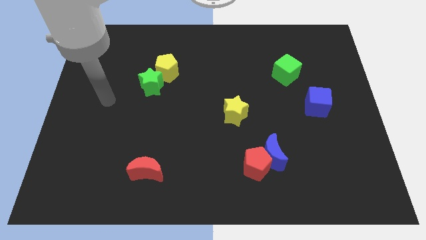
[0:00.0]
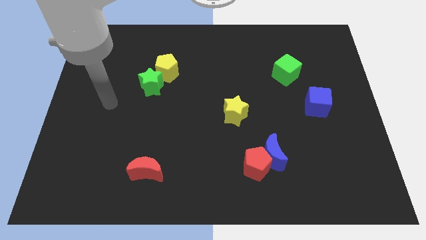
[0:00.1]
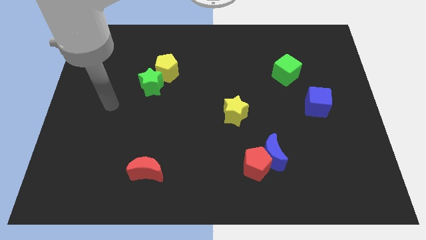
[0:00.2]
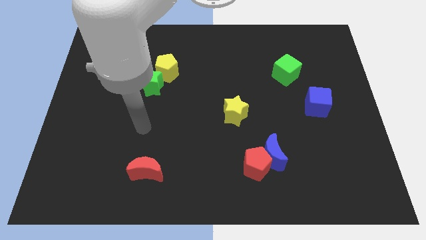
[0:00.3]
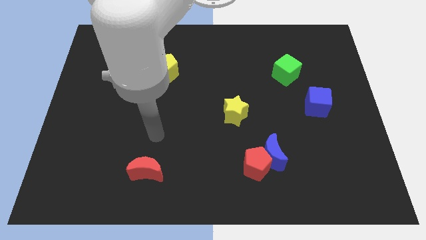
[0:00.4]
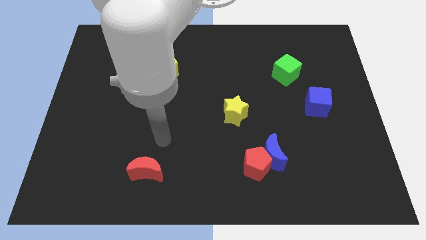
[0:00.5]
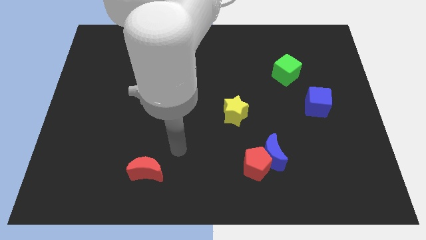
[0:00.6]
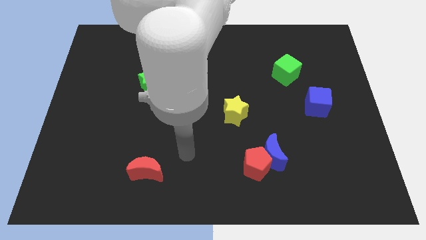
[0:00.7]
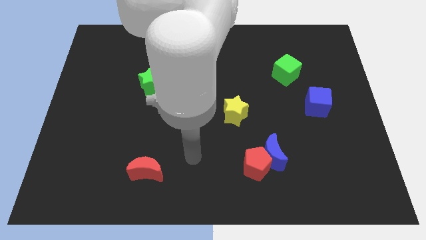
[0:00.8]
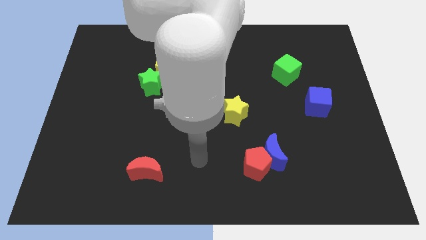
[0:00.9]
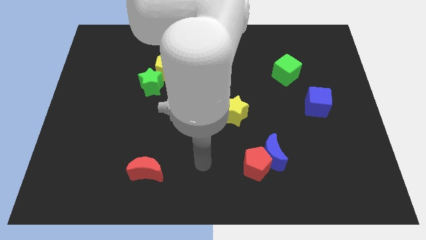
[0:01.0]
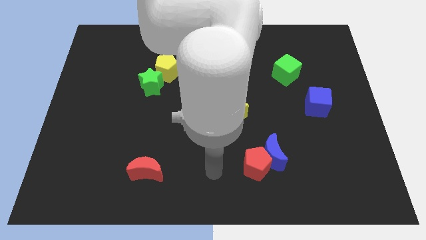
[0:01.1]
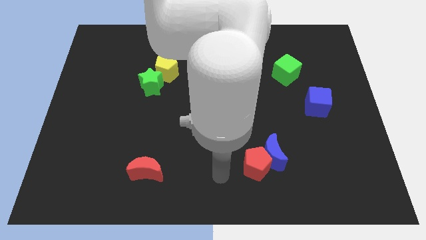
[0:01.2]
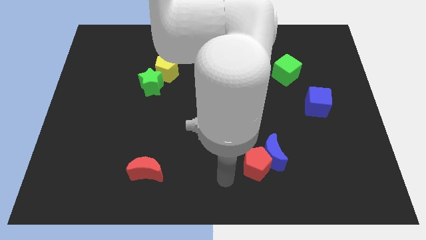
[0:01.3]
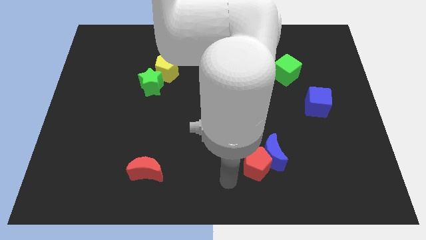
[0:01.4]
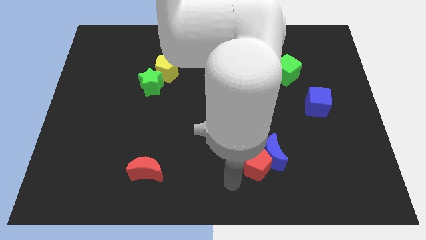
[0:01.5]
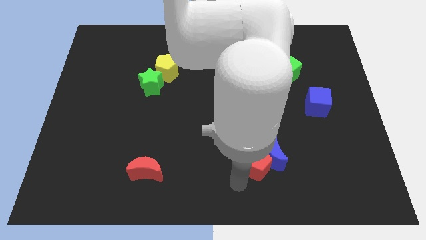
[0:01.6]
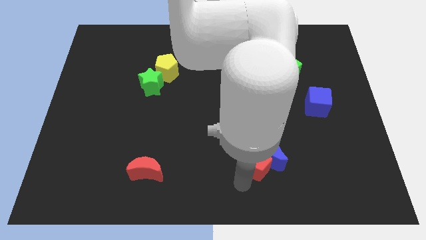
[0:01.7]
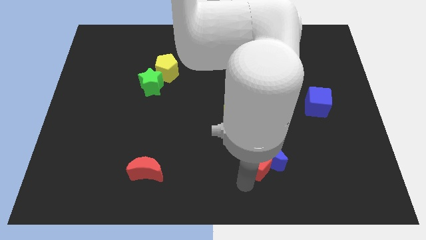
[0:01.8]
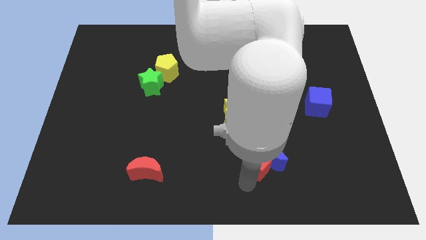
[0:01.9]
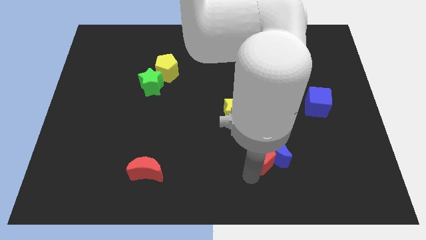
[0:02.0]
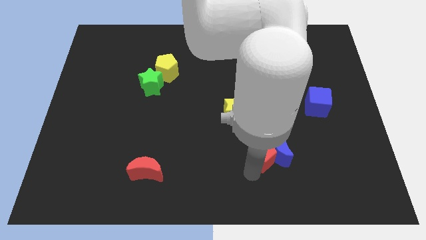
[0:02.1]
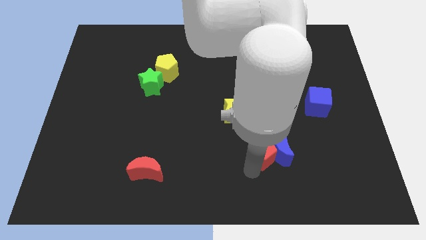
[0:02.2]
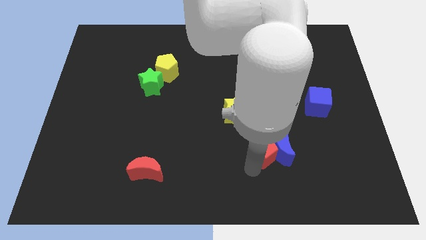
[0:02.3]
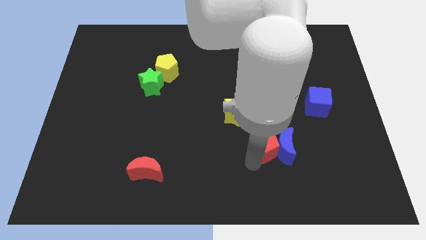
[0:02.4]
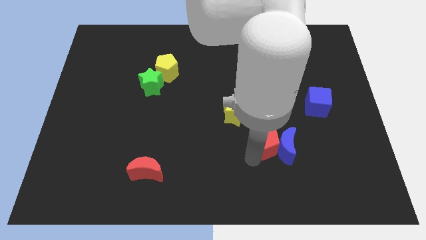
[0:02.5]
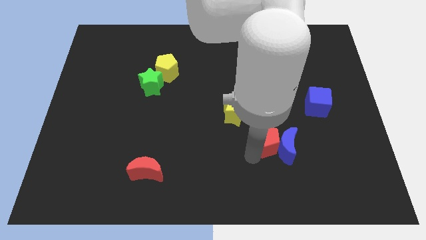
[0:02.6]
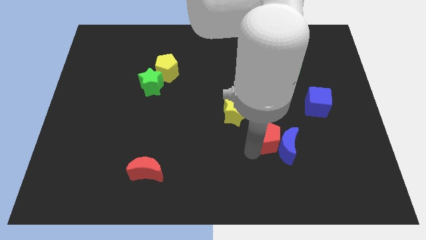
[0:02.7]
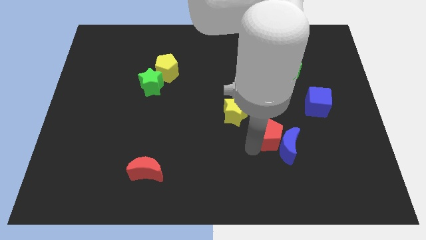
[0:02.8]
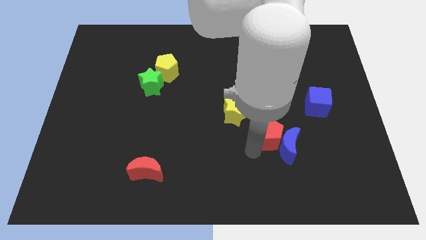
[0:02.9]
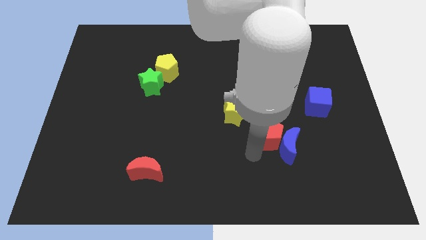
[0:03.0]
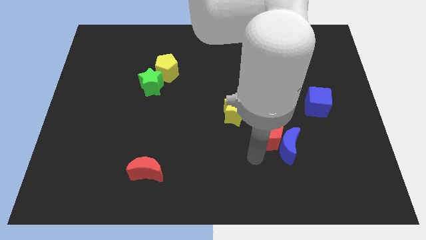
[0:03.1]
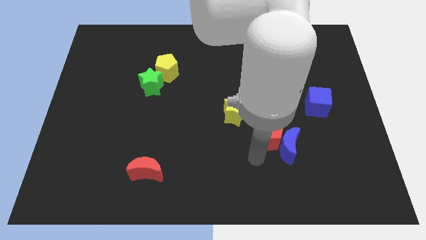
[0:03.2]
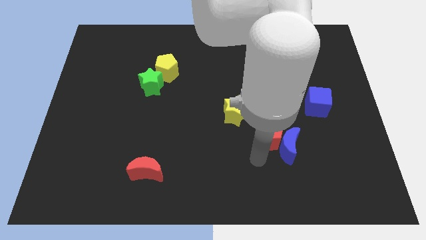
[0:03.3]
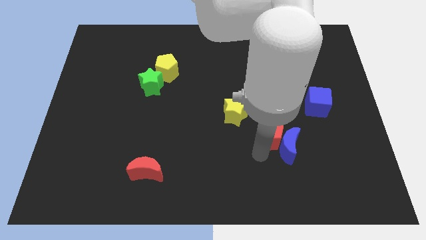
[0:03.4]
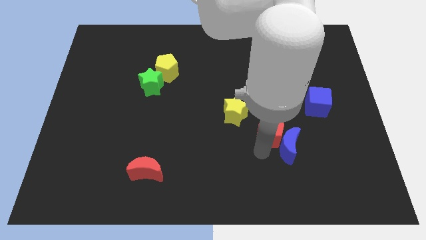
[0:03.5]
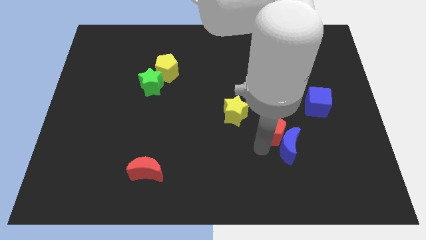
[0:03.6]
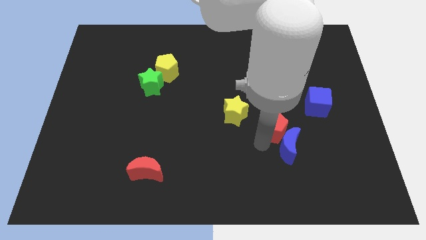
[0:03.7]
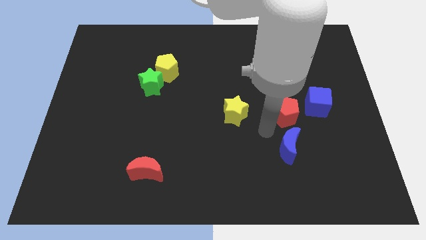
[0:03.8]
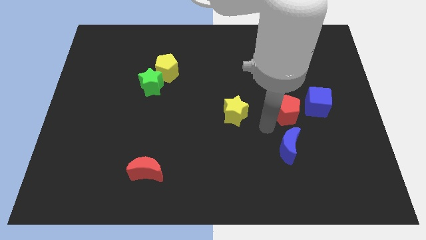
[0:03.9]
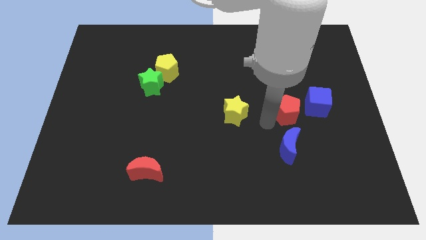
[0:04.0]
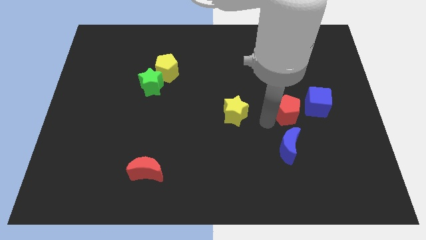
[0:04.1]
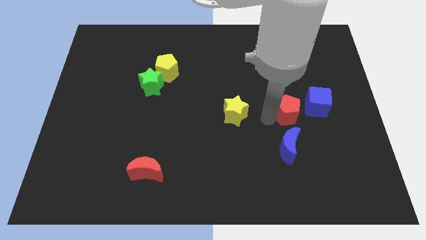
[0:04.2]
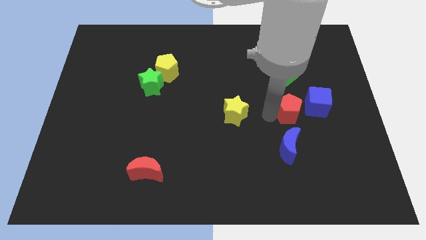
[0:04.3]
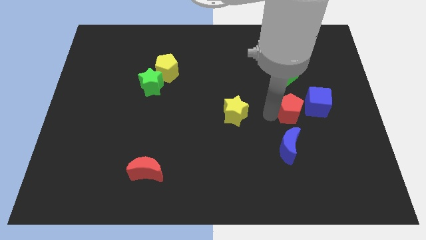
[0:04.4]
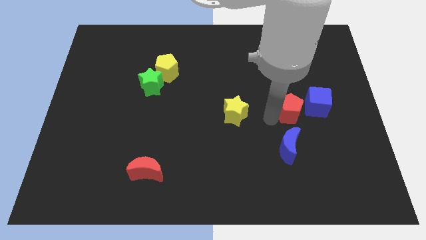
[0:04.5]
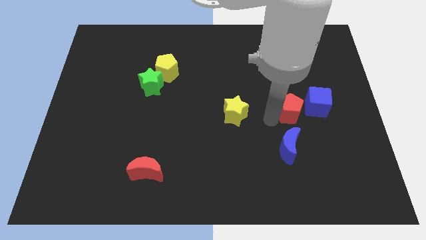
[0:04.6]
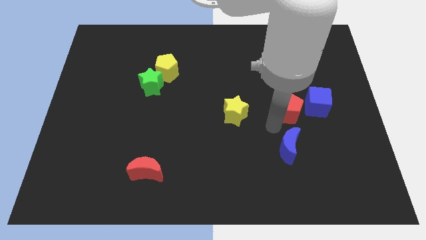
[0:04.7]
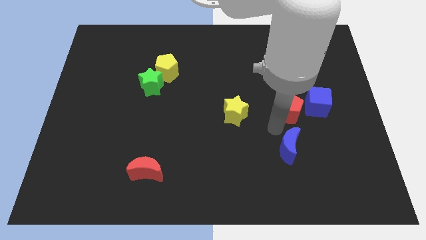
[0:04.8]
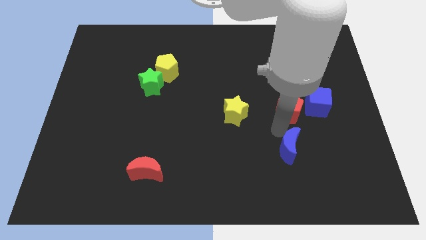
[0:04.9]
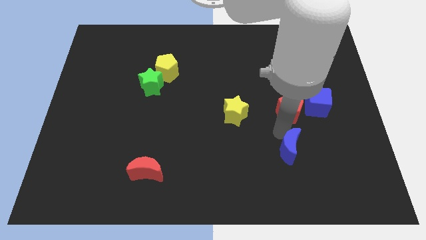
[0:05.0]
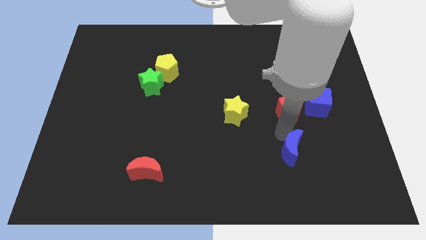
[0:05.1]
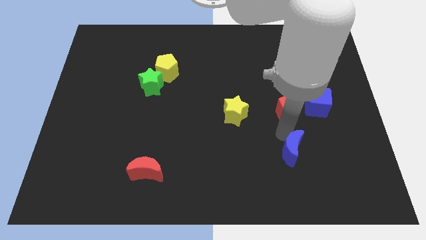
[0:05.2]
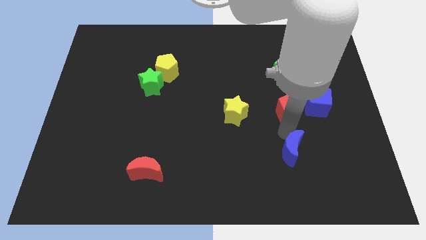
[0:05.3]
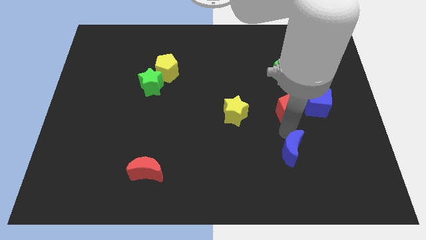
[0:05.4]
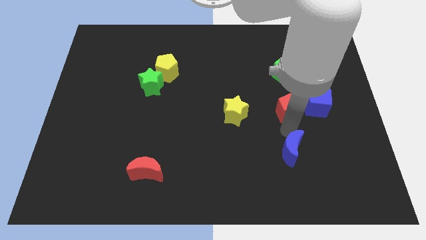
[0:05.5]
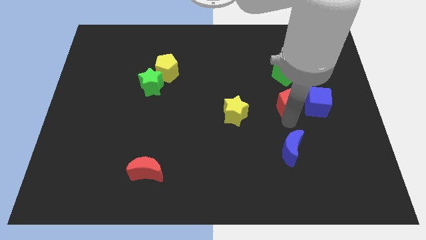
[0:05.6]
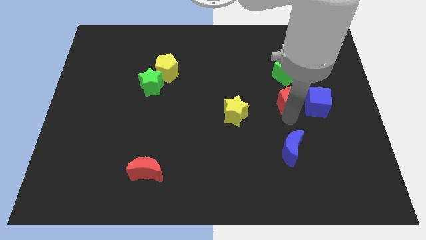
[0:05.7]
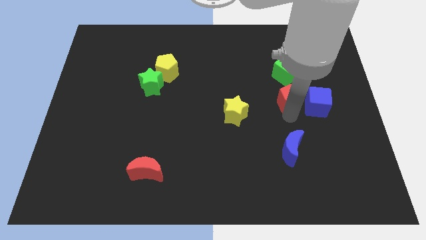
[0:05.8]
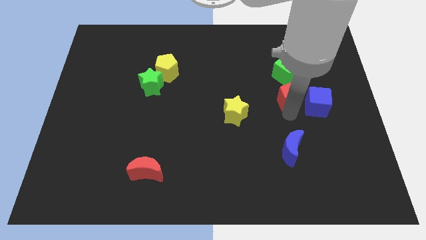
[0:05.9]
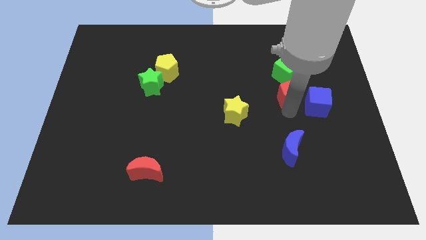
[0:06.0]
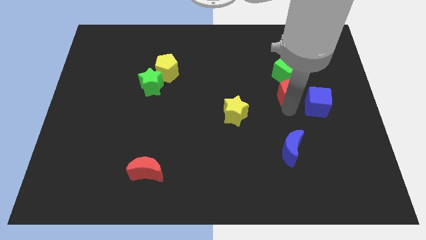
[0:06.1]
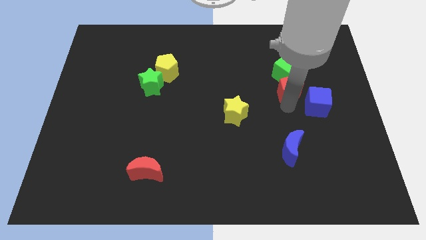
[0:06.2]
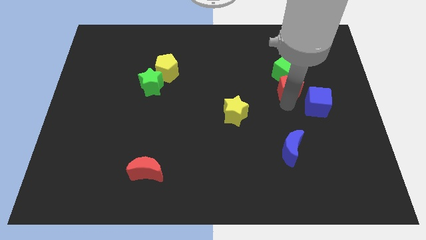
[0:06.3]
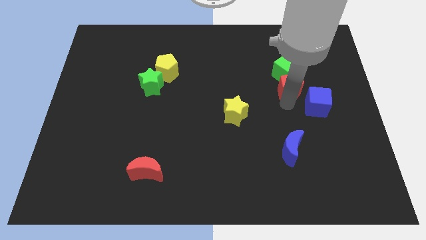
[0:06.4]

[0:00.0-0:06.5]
put the red pentagon next to the green cube

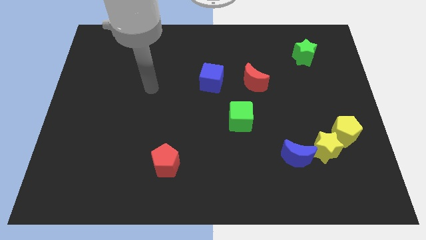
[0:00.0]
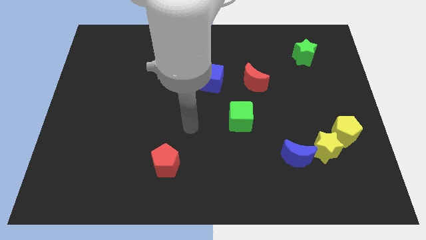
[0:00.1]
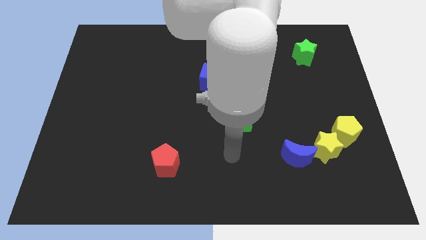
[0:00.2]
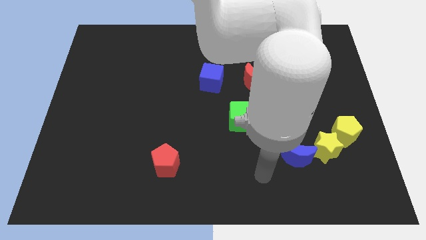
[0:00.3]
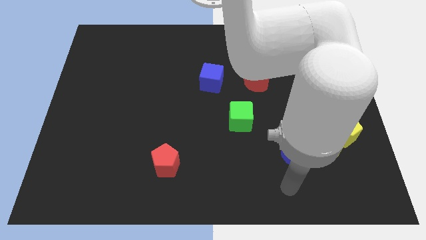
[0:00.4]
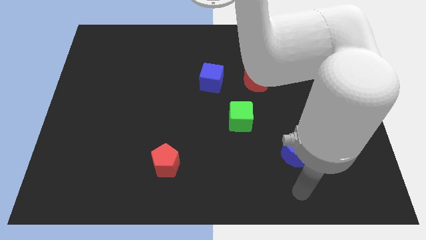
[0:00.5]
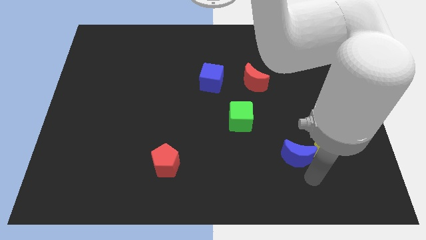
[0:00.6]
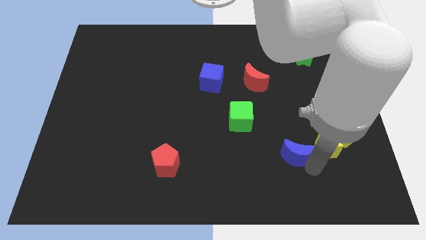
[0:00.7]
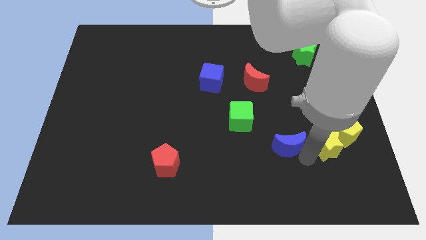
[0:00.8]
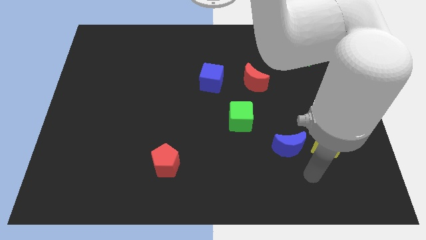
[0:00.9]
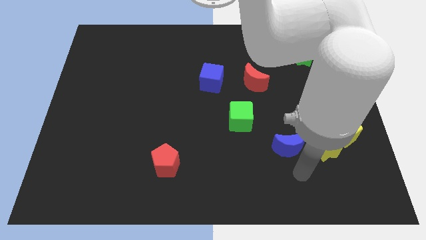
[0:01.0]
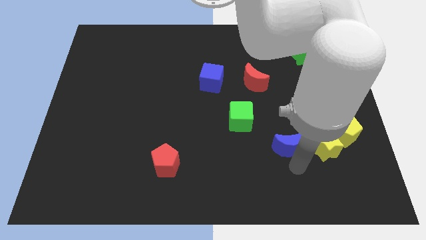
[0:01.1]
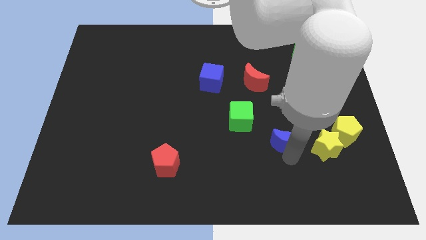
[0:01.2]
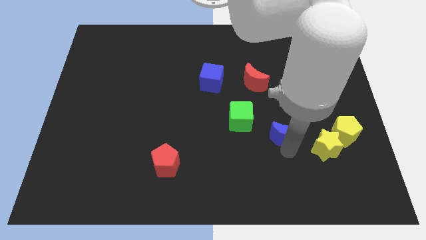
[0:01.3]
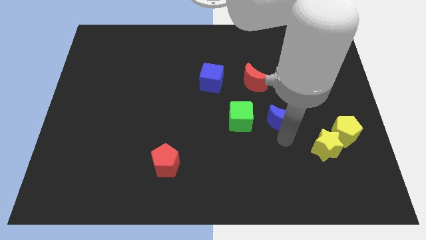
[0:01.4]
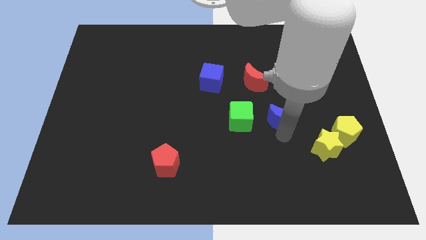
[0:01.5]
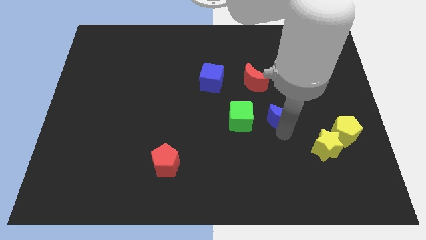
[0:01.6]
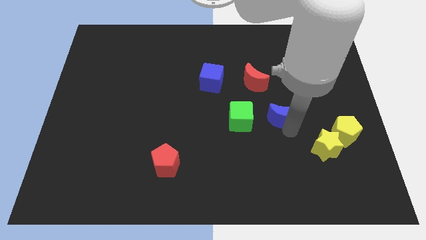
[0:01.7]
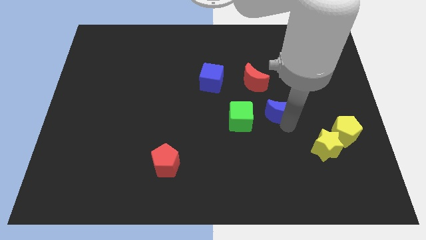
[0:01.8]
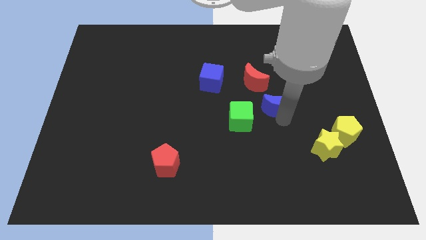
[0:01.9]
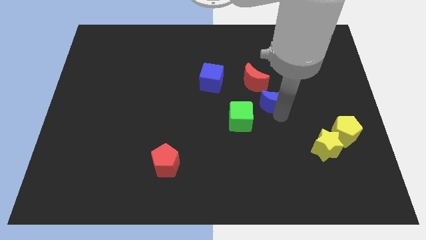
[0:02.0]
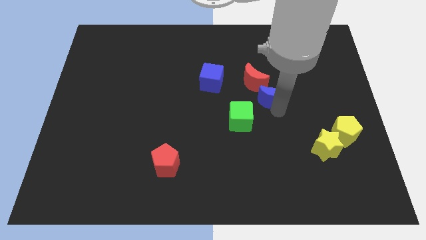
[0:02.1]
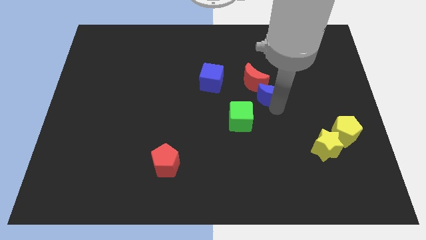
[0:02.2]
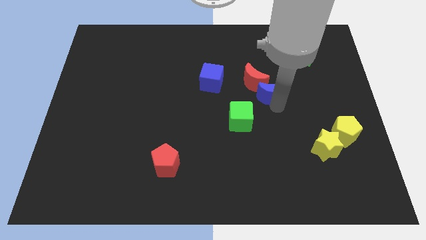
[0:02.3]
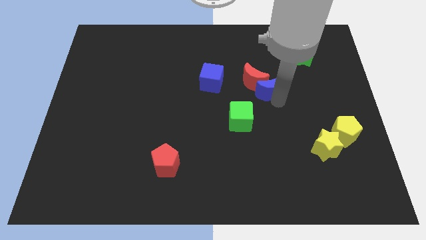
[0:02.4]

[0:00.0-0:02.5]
slide the blue moon next to the red moon
